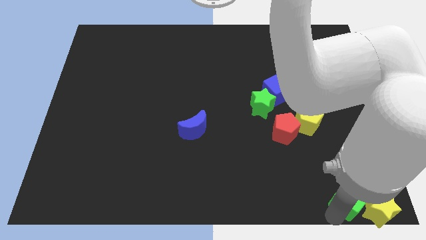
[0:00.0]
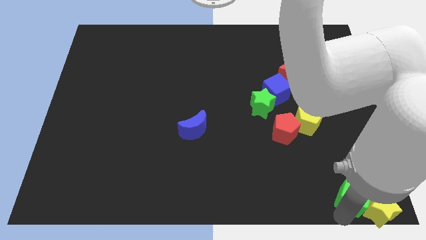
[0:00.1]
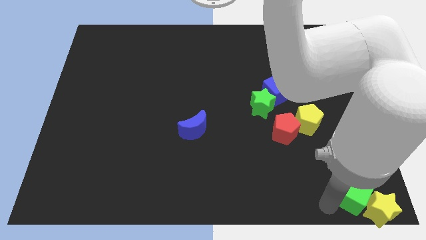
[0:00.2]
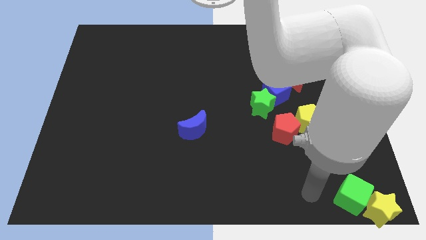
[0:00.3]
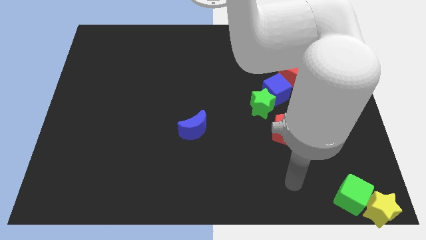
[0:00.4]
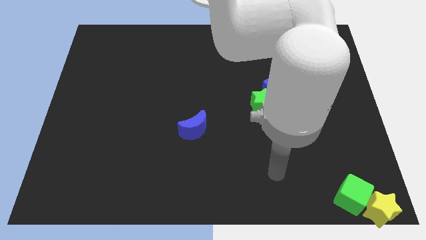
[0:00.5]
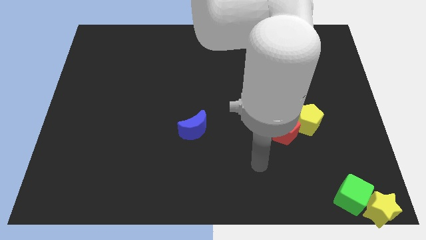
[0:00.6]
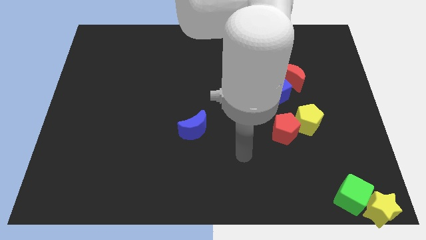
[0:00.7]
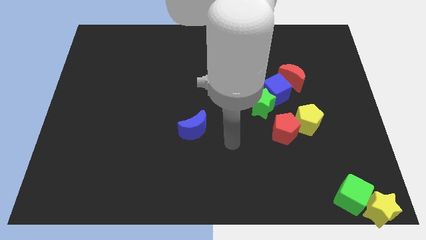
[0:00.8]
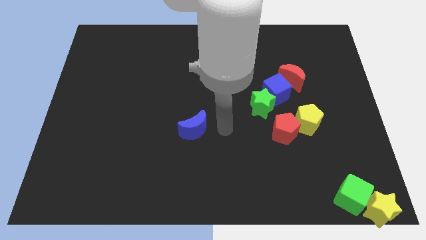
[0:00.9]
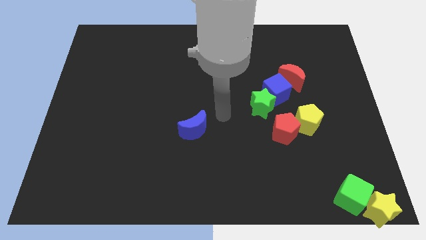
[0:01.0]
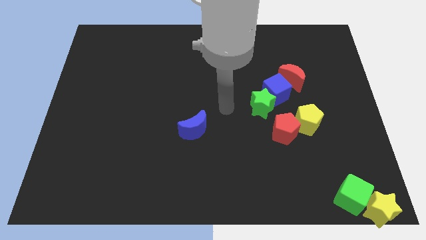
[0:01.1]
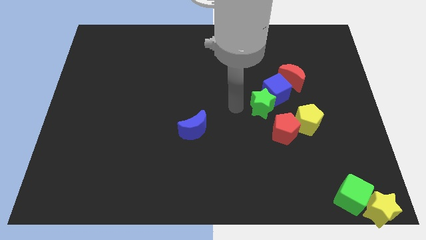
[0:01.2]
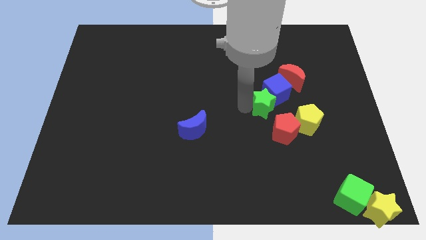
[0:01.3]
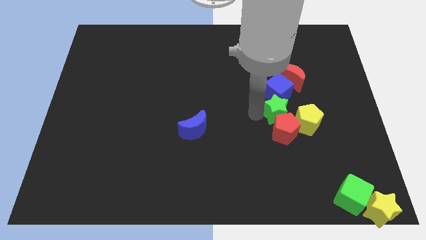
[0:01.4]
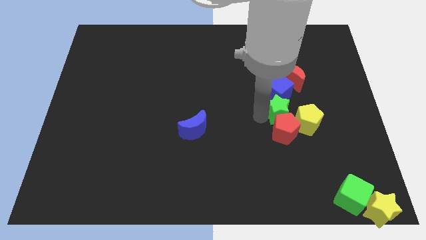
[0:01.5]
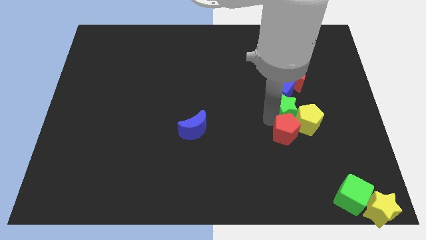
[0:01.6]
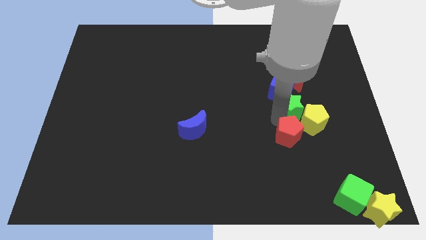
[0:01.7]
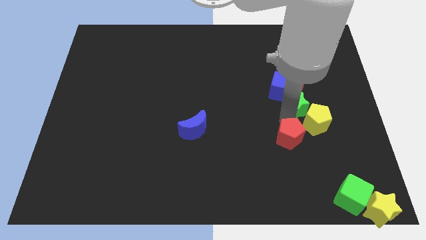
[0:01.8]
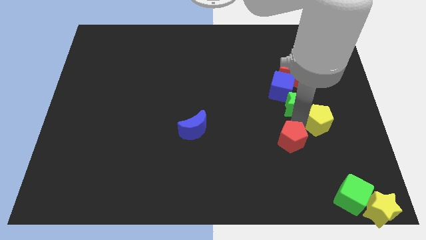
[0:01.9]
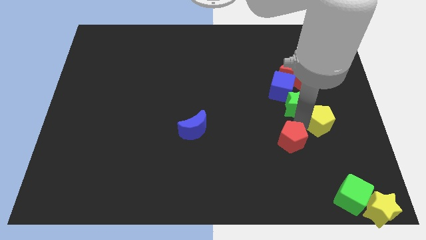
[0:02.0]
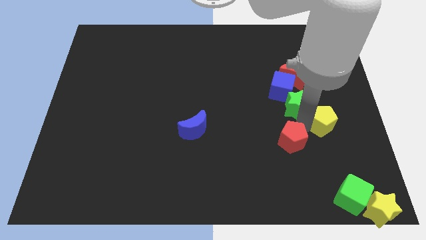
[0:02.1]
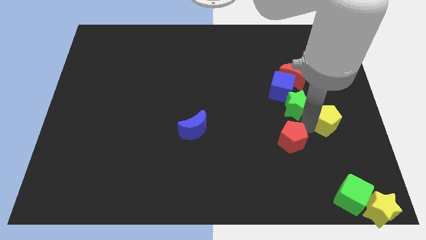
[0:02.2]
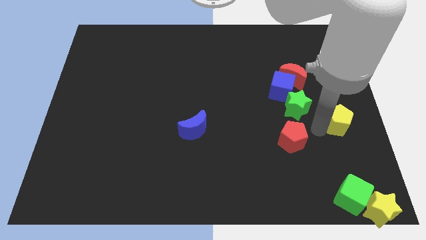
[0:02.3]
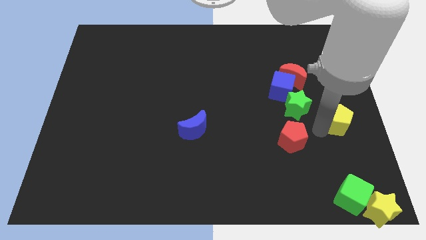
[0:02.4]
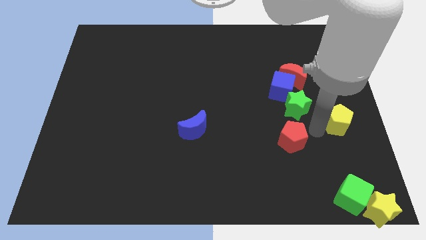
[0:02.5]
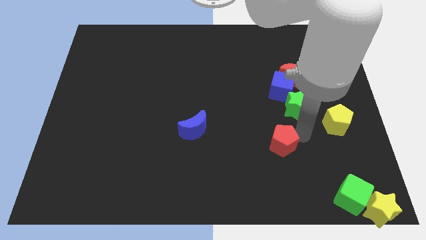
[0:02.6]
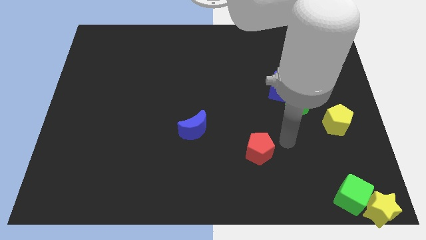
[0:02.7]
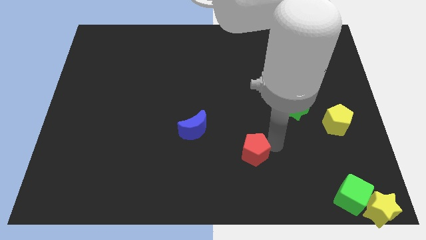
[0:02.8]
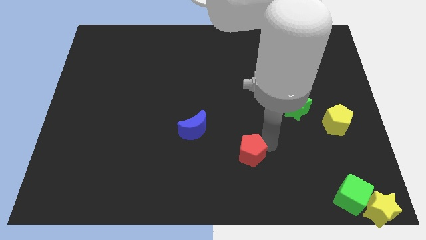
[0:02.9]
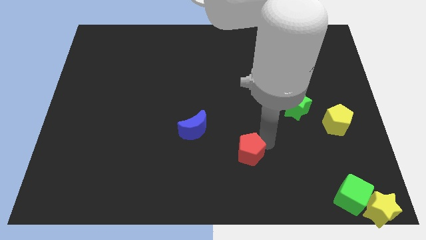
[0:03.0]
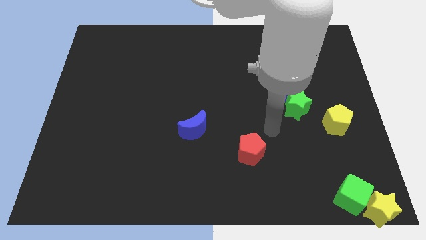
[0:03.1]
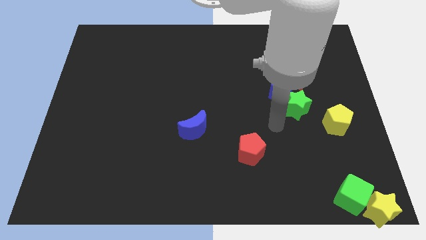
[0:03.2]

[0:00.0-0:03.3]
separate the red pentagon from the yellow pentagon

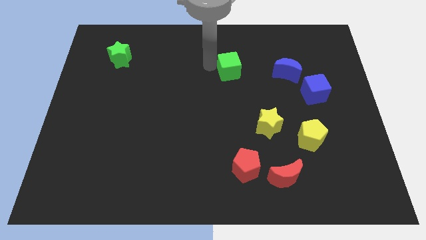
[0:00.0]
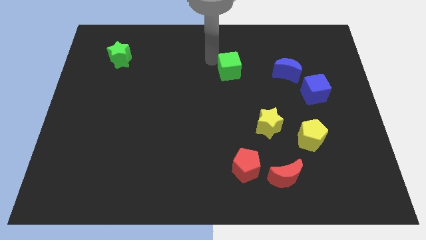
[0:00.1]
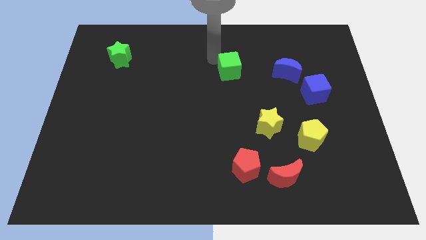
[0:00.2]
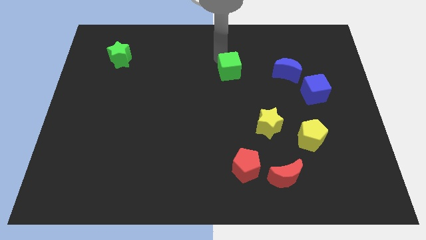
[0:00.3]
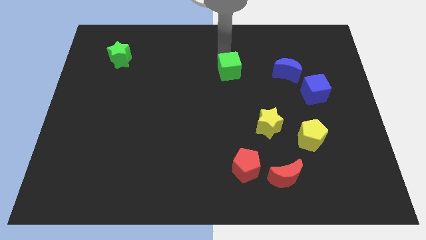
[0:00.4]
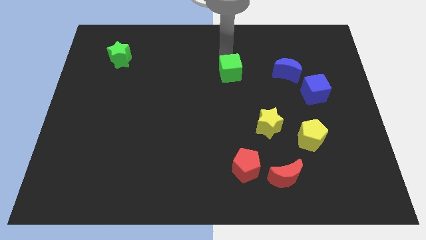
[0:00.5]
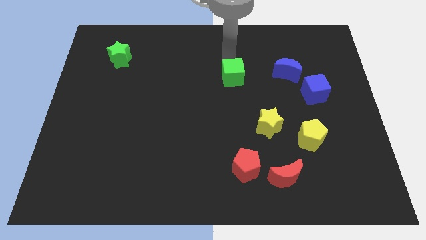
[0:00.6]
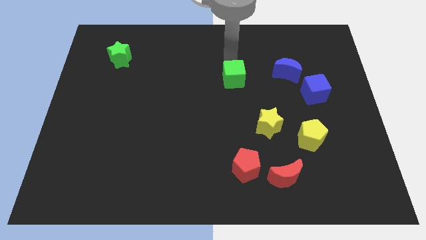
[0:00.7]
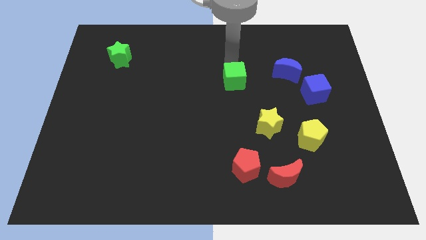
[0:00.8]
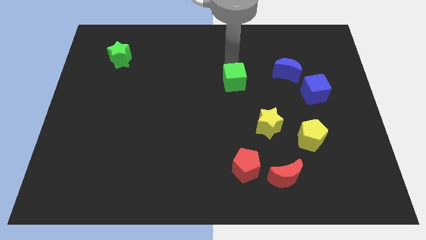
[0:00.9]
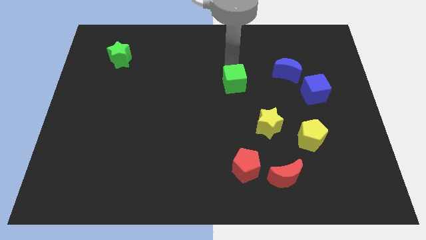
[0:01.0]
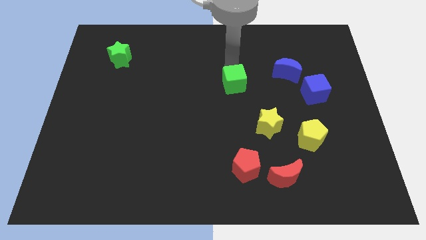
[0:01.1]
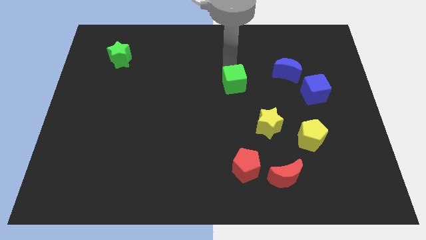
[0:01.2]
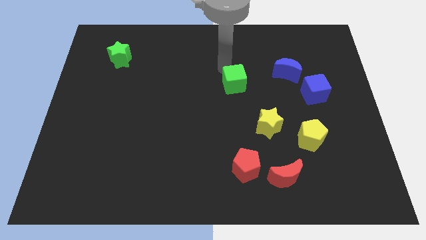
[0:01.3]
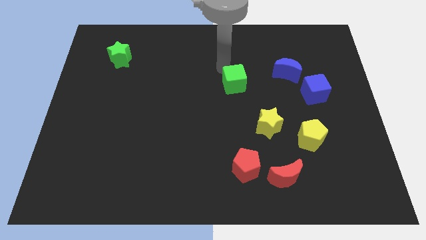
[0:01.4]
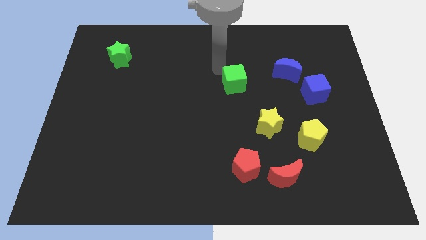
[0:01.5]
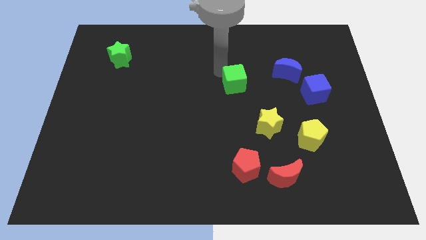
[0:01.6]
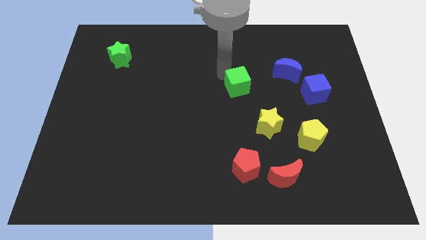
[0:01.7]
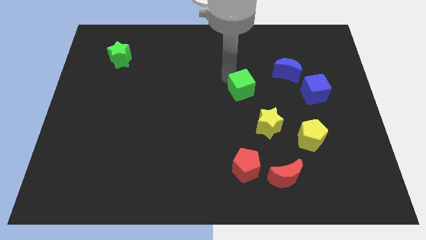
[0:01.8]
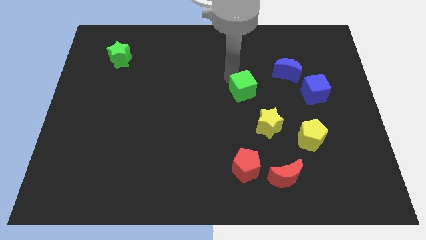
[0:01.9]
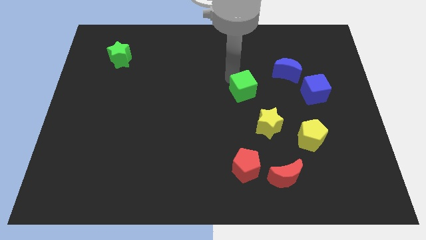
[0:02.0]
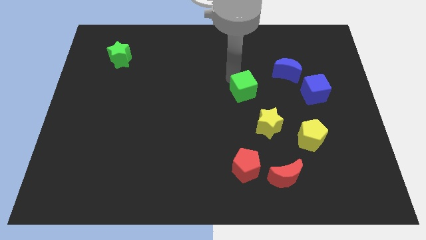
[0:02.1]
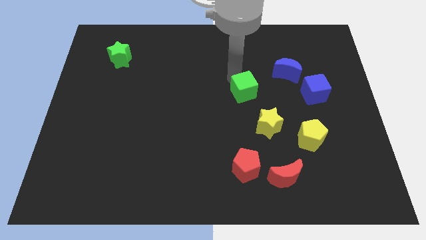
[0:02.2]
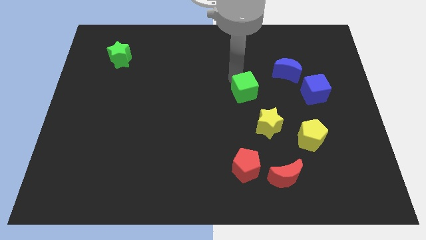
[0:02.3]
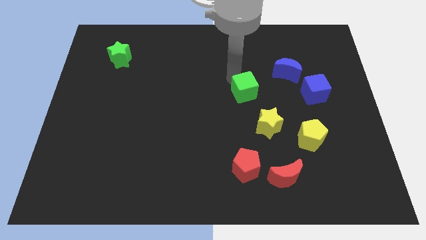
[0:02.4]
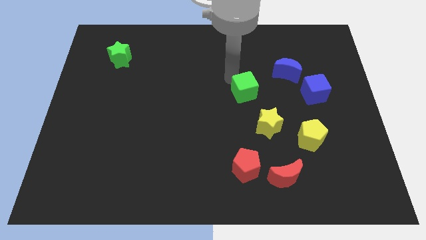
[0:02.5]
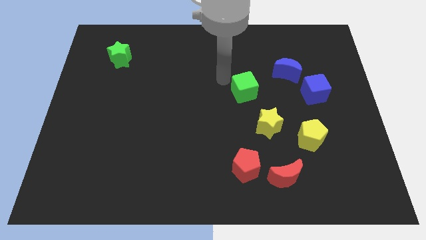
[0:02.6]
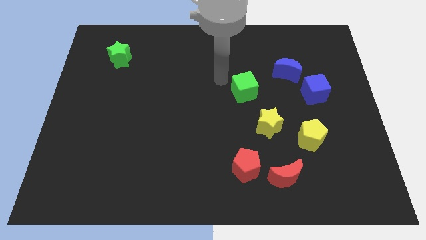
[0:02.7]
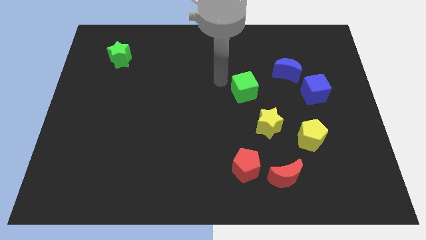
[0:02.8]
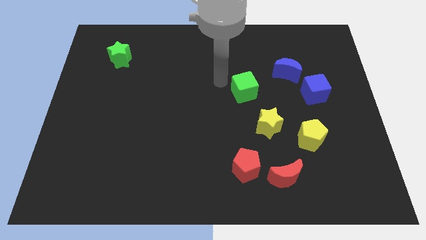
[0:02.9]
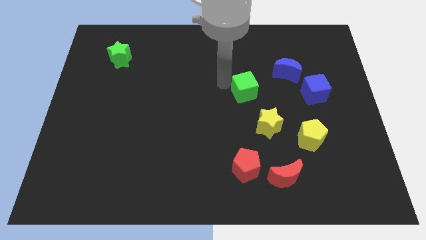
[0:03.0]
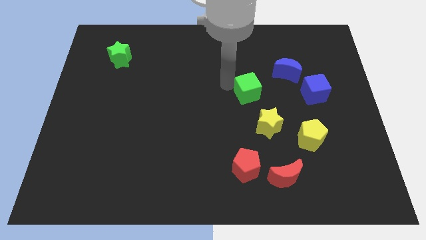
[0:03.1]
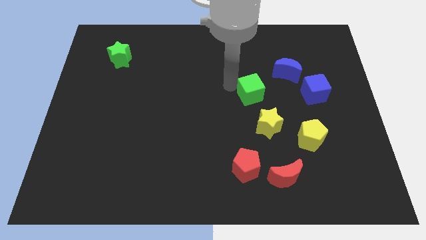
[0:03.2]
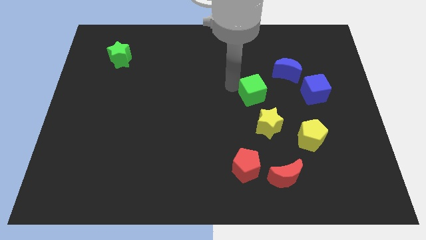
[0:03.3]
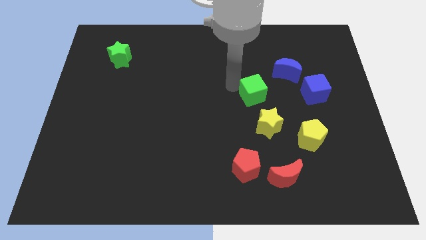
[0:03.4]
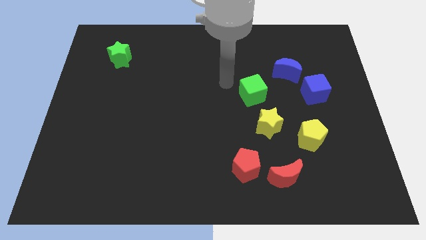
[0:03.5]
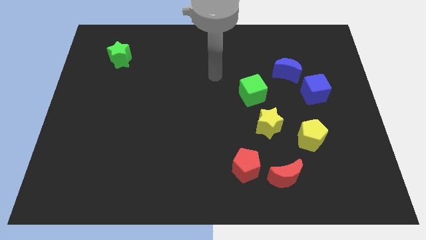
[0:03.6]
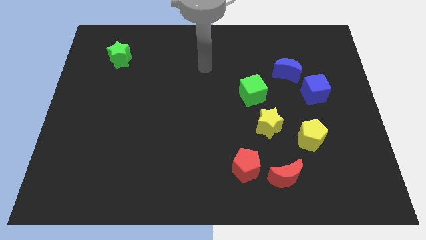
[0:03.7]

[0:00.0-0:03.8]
push the green cube to the top left of the yellow star

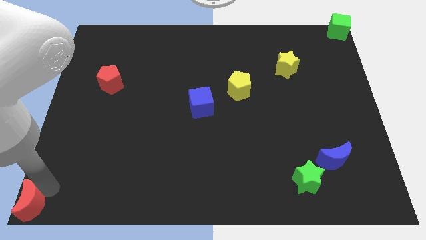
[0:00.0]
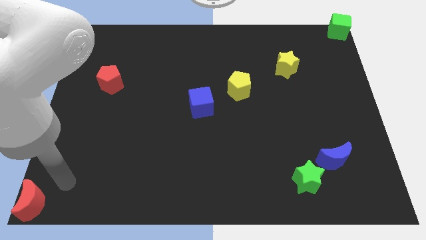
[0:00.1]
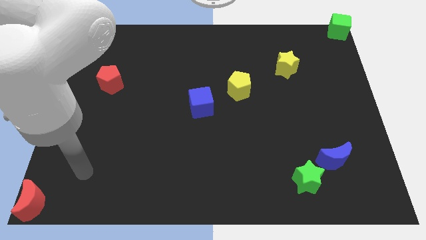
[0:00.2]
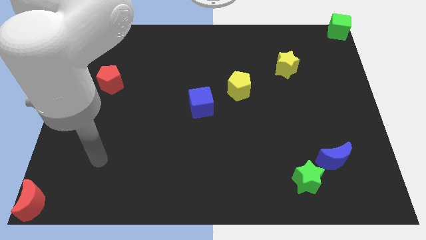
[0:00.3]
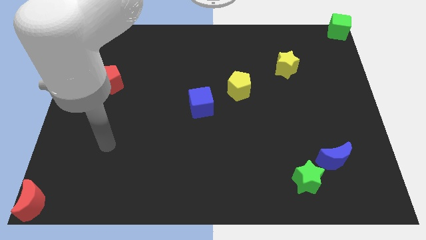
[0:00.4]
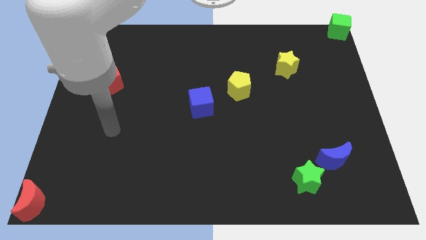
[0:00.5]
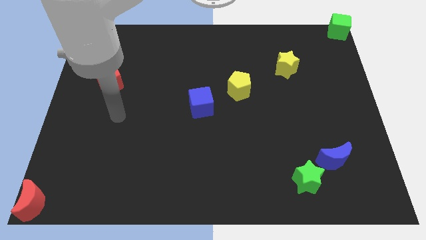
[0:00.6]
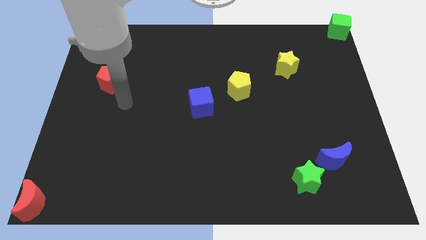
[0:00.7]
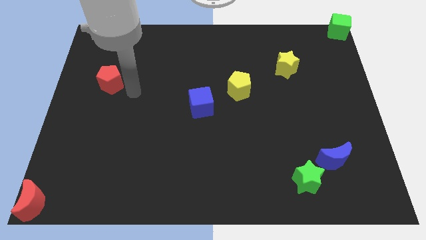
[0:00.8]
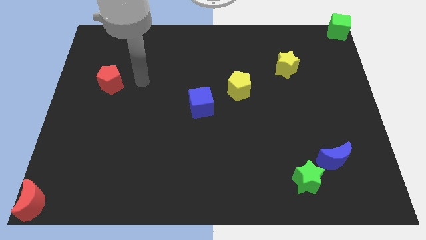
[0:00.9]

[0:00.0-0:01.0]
move the arm away from the red moon

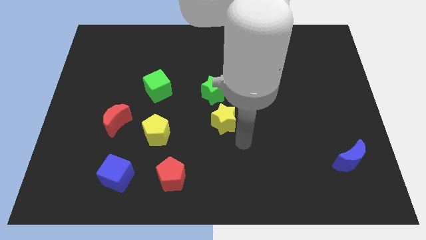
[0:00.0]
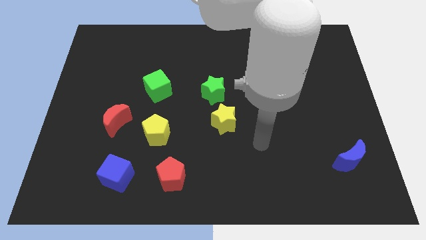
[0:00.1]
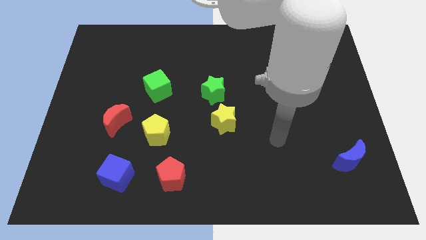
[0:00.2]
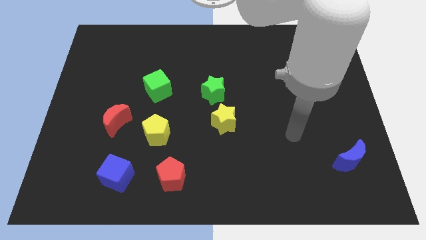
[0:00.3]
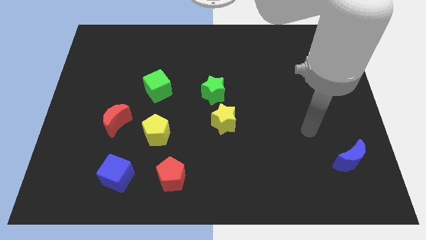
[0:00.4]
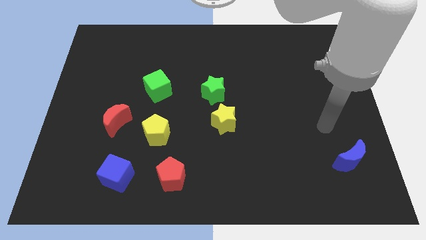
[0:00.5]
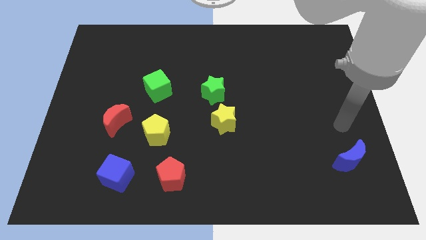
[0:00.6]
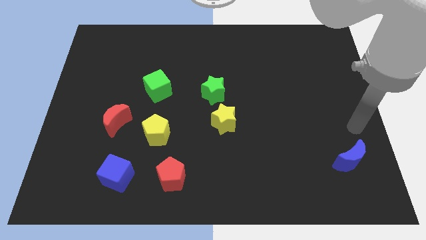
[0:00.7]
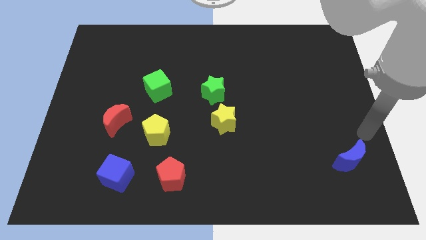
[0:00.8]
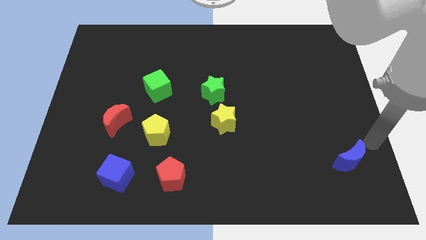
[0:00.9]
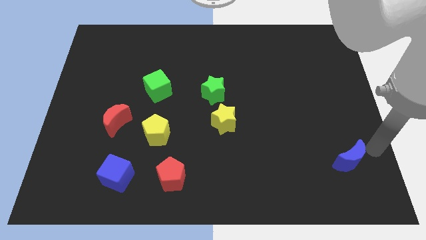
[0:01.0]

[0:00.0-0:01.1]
point your arm towards the top right side of the blue moon
